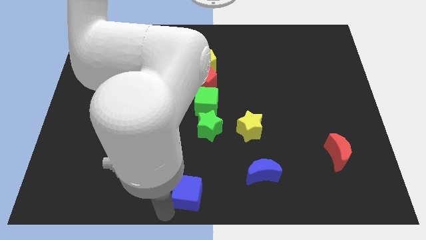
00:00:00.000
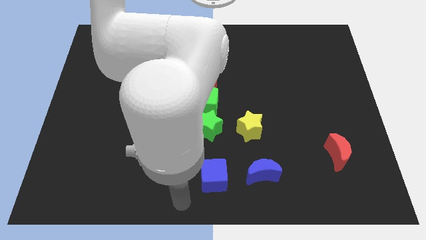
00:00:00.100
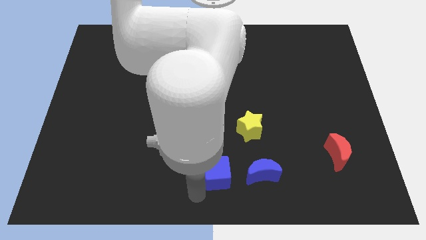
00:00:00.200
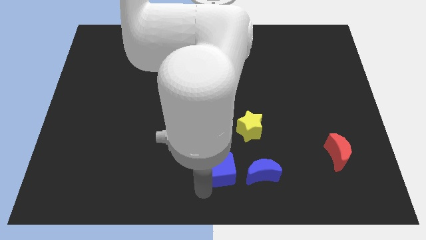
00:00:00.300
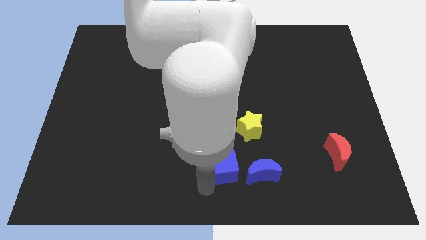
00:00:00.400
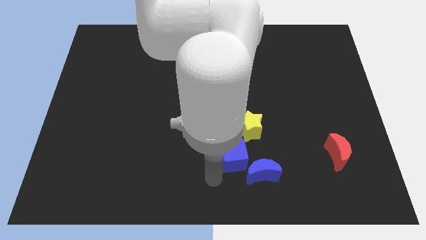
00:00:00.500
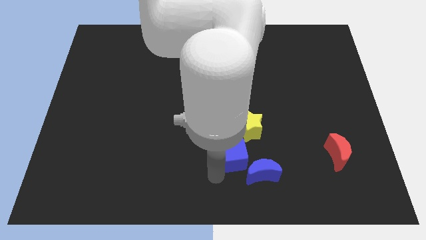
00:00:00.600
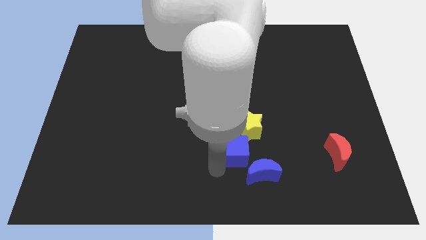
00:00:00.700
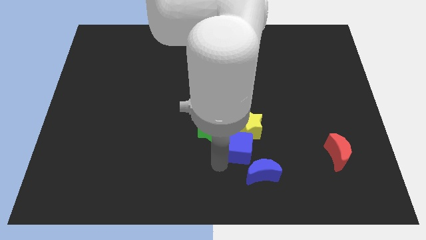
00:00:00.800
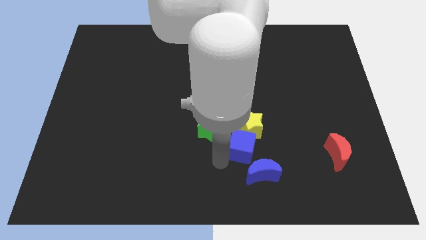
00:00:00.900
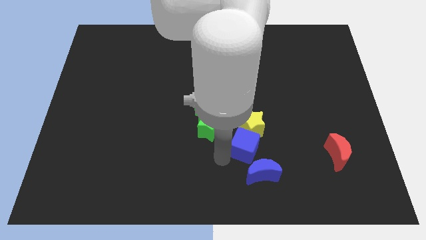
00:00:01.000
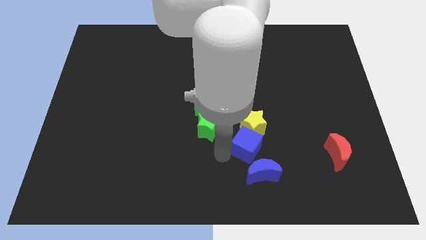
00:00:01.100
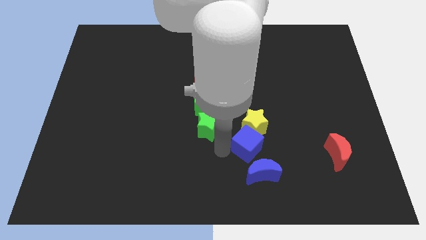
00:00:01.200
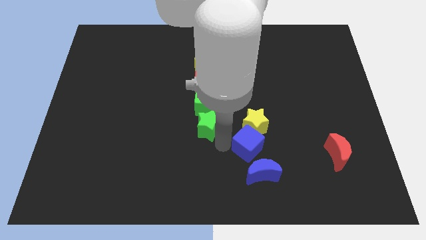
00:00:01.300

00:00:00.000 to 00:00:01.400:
place blue cube to the bottom of the yellow star

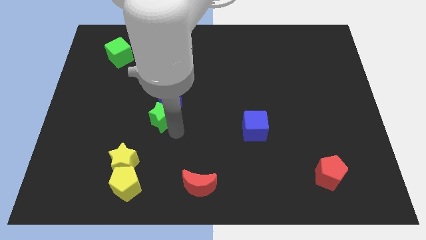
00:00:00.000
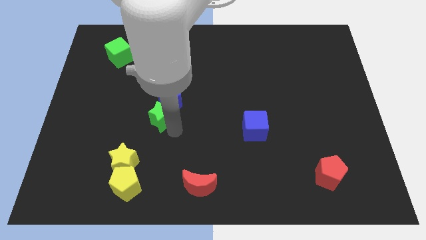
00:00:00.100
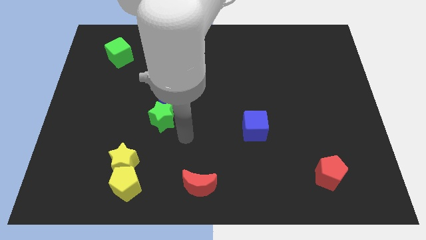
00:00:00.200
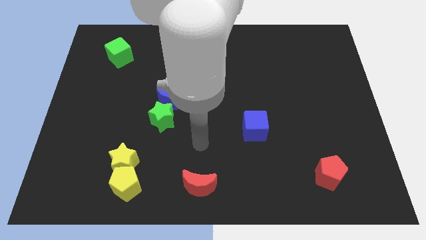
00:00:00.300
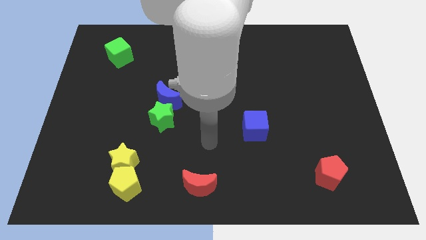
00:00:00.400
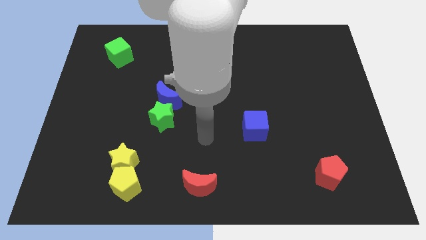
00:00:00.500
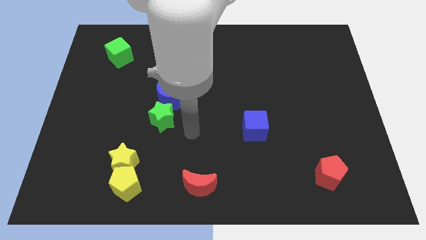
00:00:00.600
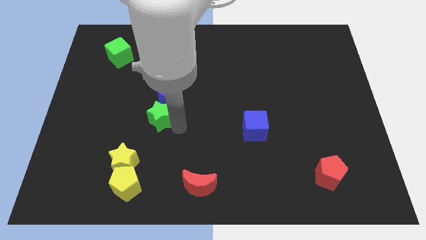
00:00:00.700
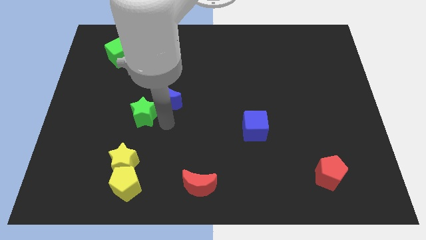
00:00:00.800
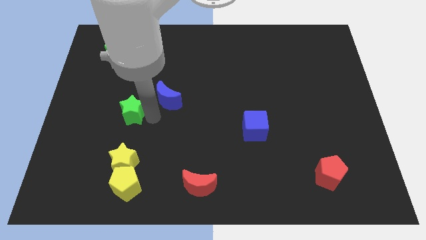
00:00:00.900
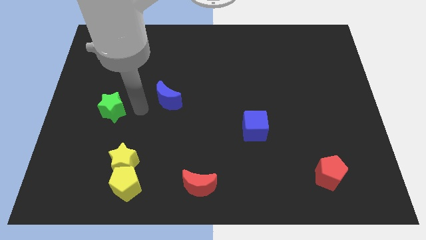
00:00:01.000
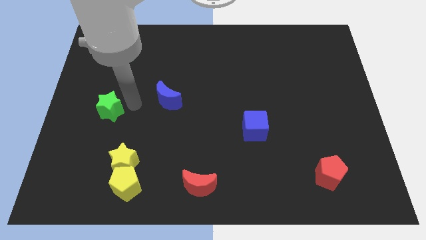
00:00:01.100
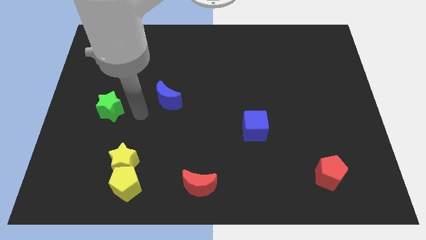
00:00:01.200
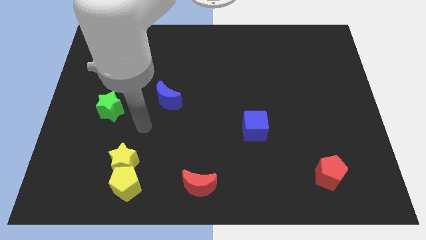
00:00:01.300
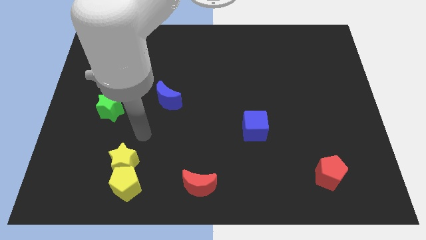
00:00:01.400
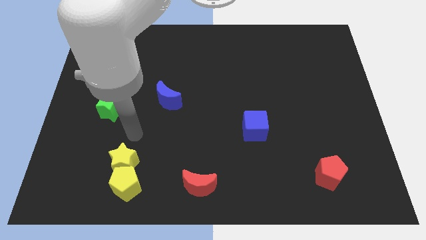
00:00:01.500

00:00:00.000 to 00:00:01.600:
separate the green star from the blue moon

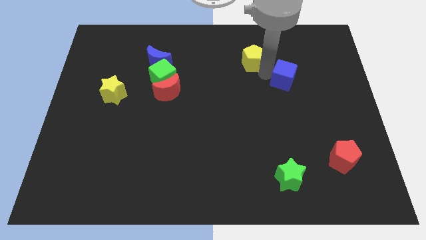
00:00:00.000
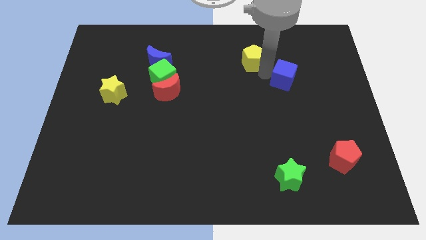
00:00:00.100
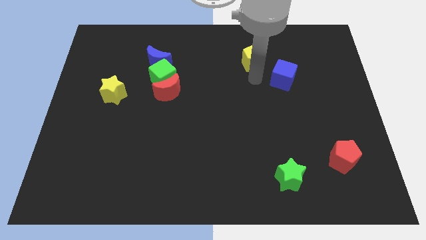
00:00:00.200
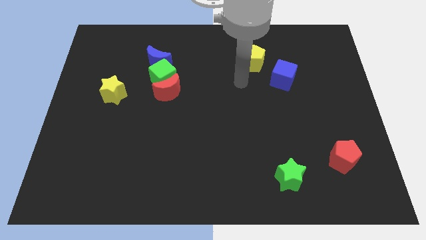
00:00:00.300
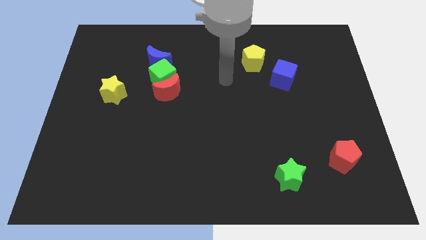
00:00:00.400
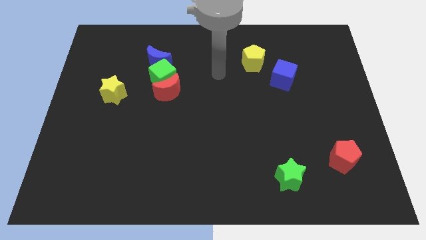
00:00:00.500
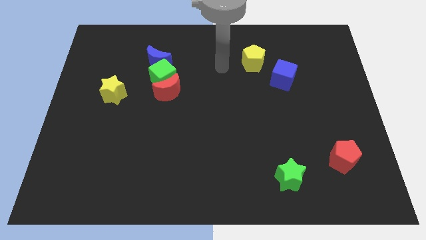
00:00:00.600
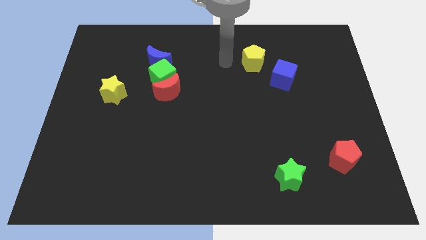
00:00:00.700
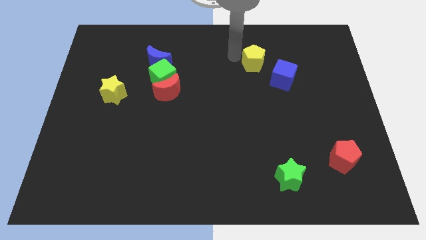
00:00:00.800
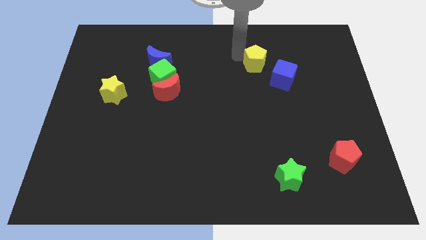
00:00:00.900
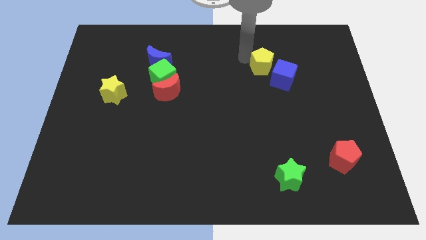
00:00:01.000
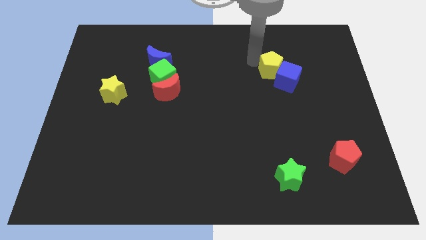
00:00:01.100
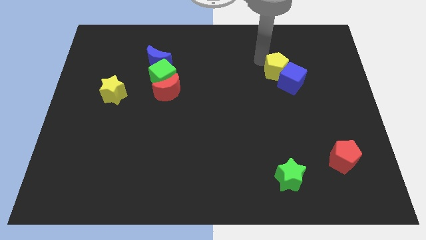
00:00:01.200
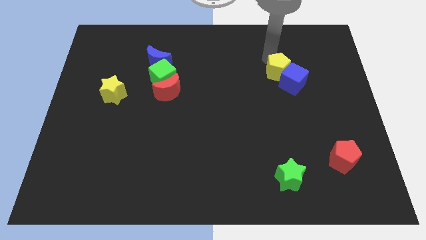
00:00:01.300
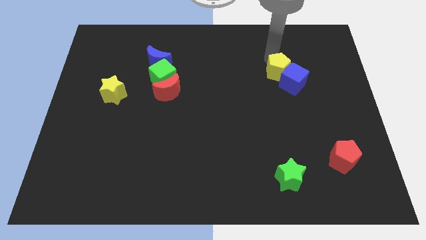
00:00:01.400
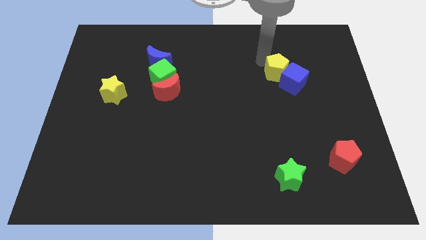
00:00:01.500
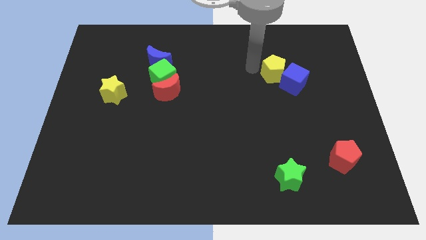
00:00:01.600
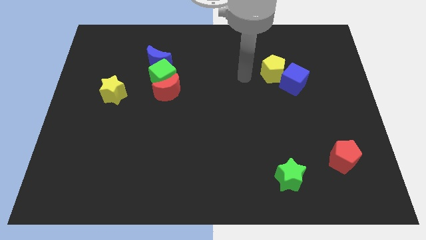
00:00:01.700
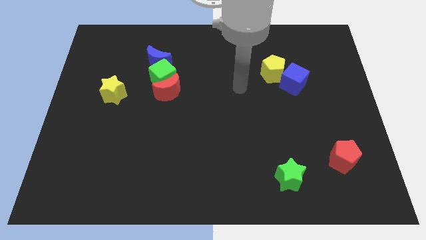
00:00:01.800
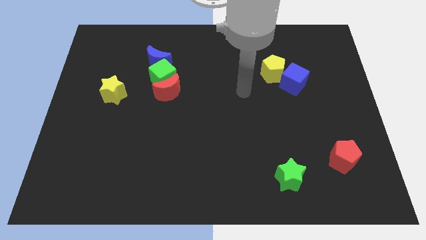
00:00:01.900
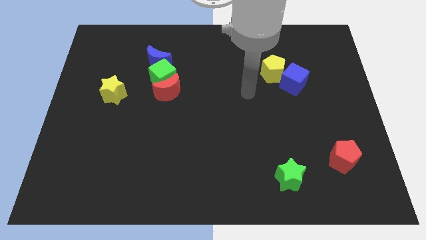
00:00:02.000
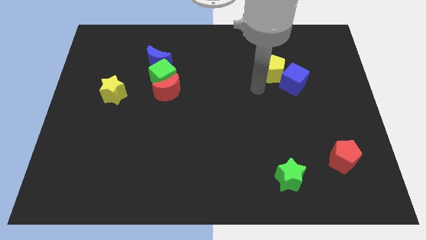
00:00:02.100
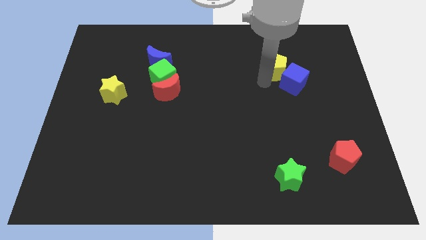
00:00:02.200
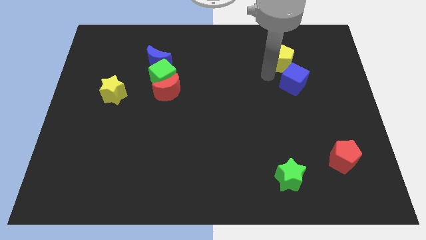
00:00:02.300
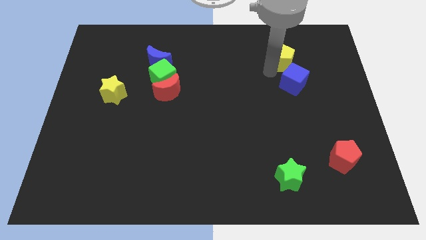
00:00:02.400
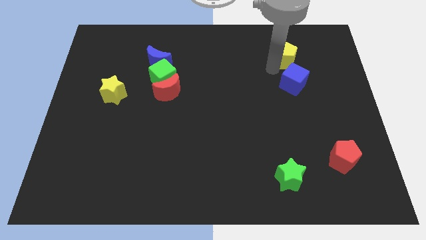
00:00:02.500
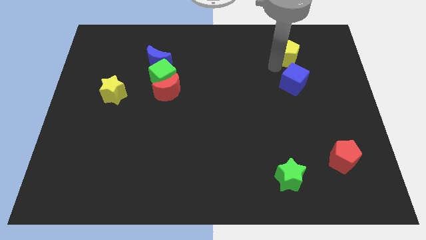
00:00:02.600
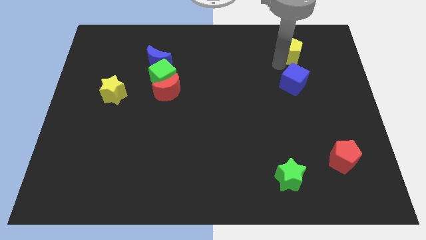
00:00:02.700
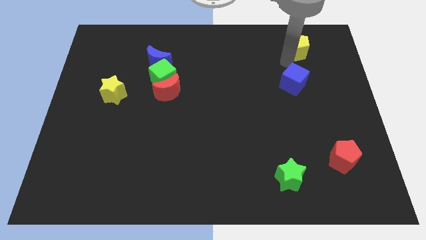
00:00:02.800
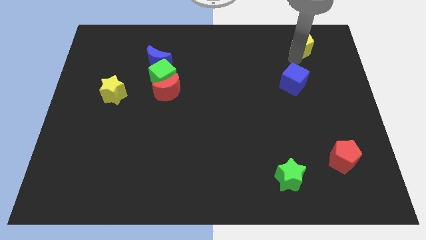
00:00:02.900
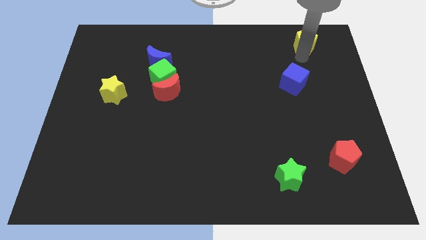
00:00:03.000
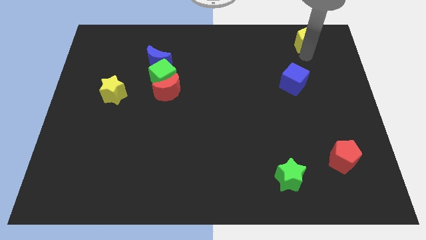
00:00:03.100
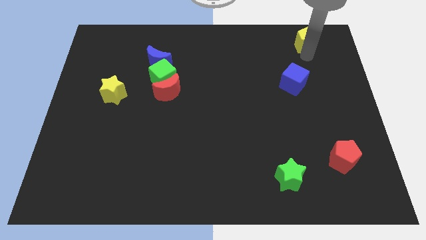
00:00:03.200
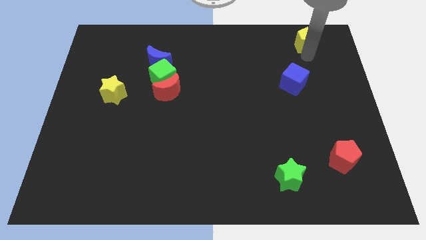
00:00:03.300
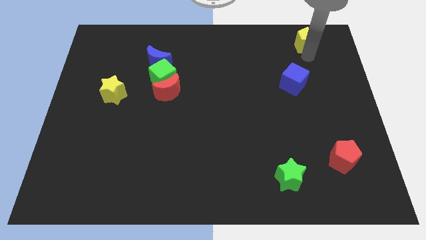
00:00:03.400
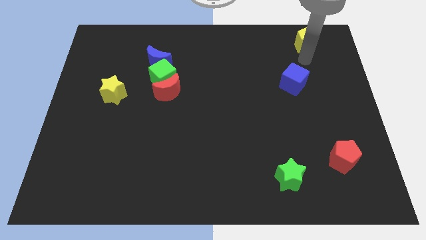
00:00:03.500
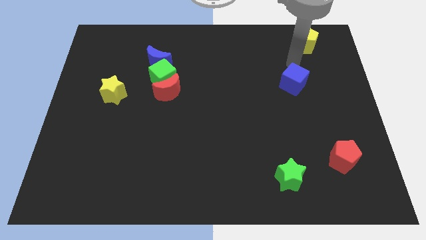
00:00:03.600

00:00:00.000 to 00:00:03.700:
separate the yellow pentagon from blue cube

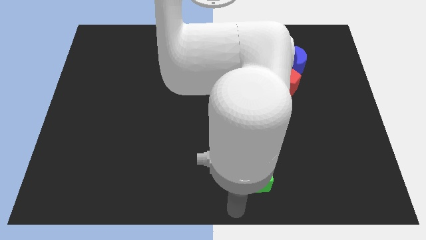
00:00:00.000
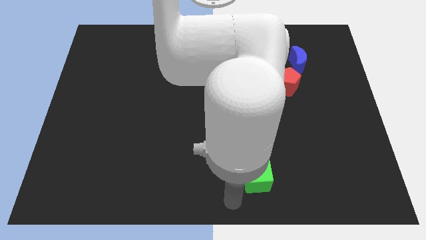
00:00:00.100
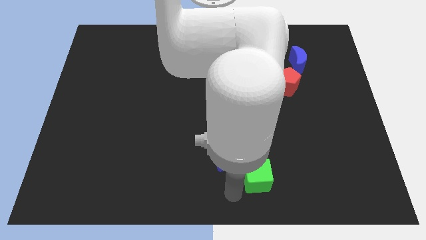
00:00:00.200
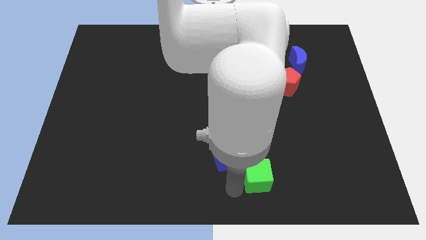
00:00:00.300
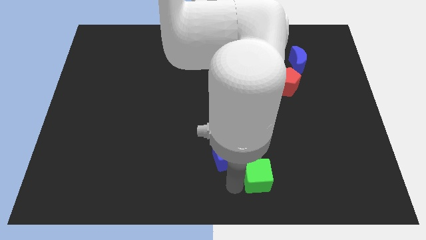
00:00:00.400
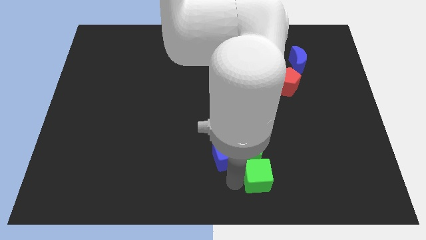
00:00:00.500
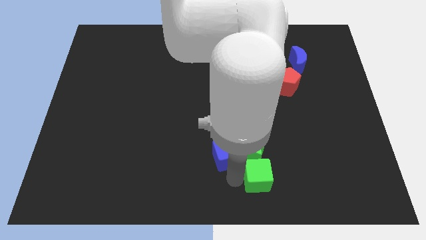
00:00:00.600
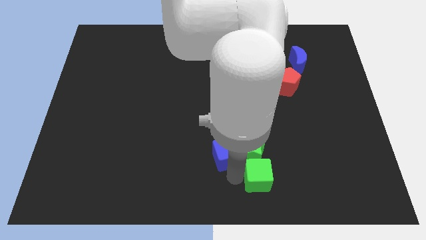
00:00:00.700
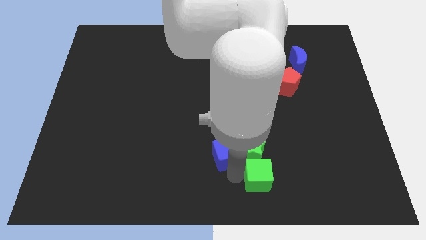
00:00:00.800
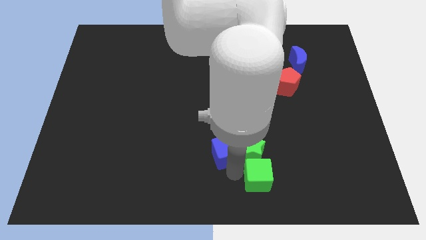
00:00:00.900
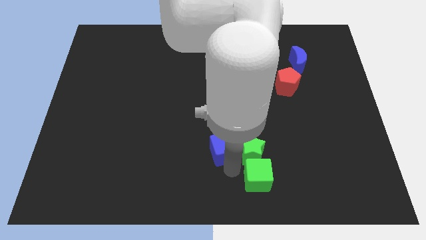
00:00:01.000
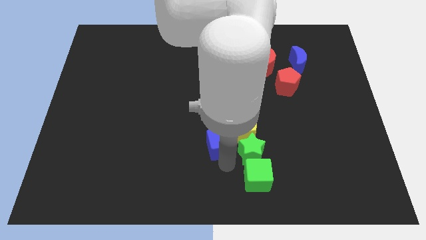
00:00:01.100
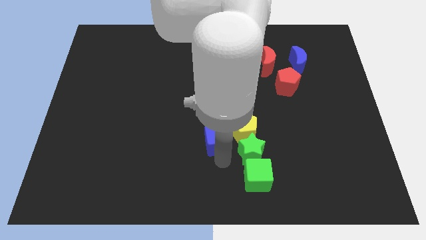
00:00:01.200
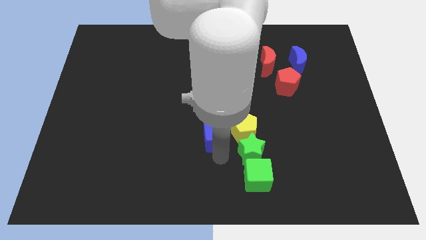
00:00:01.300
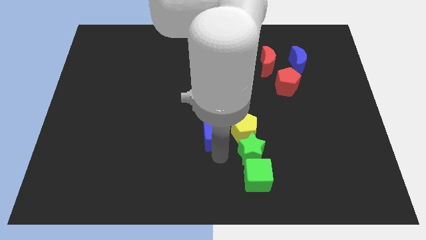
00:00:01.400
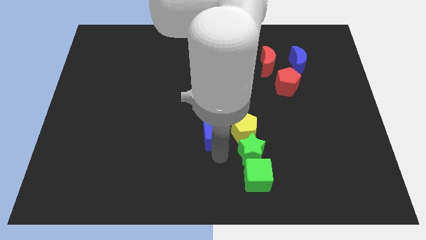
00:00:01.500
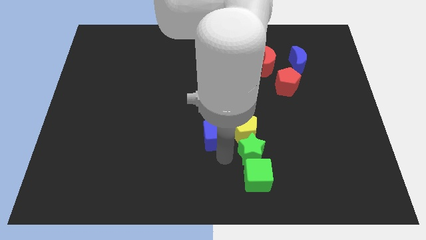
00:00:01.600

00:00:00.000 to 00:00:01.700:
separate blue cube and the green star

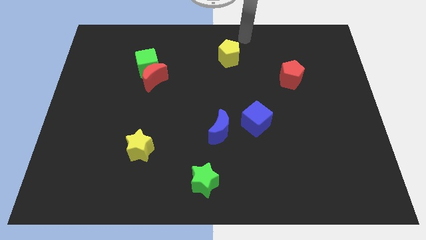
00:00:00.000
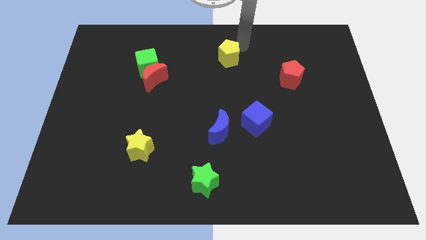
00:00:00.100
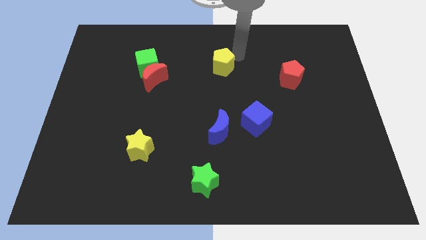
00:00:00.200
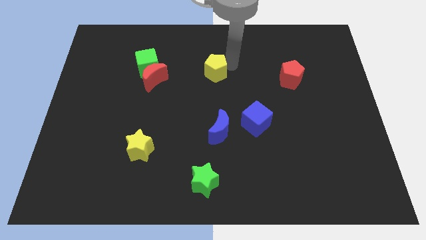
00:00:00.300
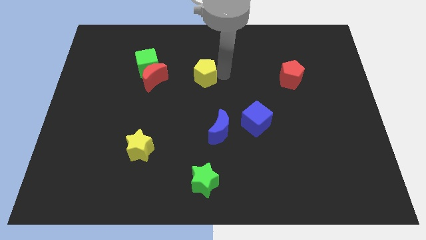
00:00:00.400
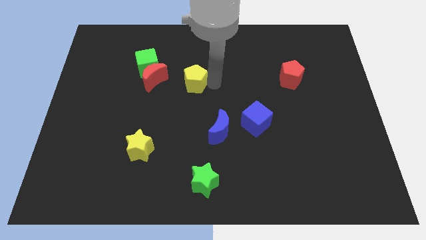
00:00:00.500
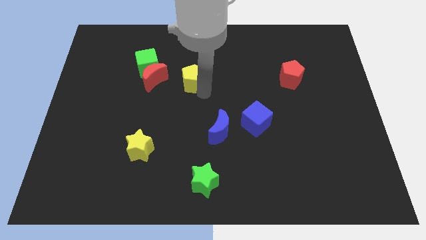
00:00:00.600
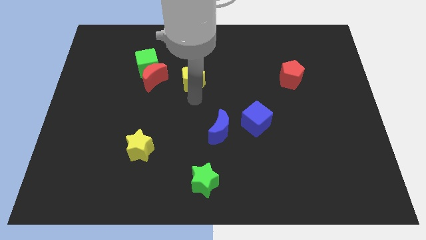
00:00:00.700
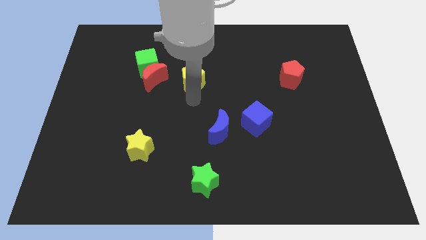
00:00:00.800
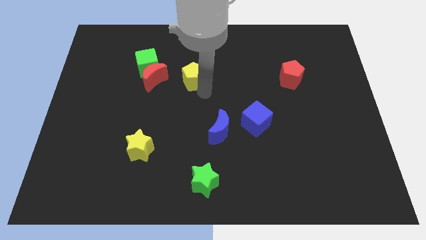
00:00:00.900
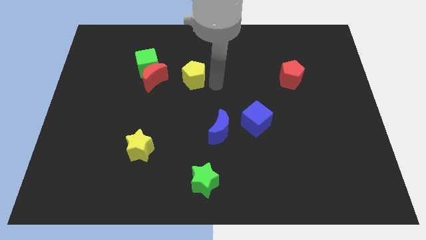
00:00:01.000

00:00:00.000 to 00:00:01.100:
move the yellow pentagon to the right of the red crescent
